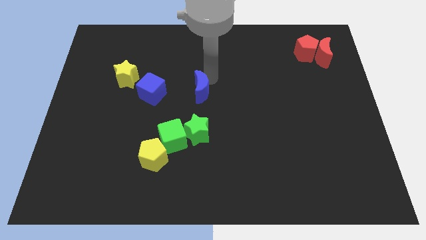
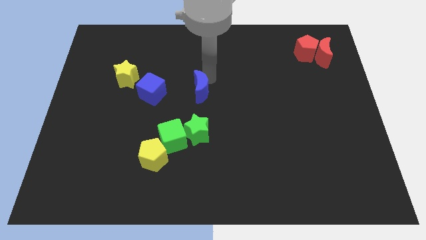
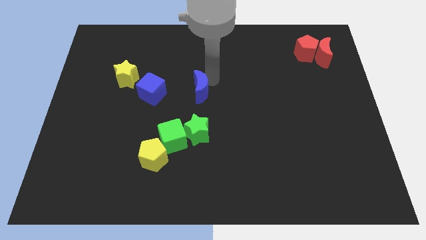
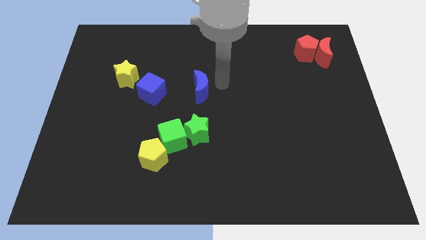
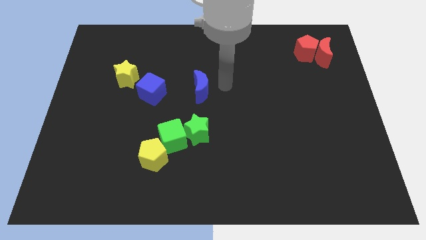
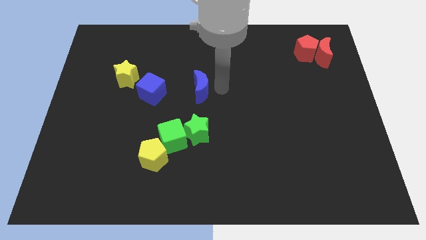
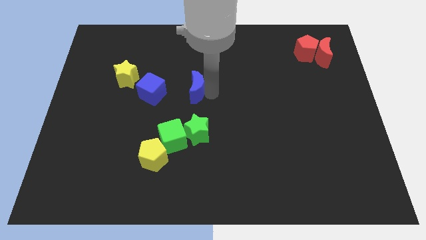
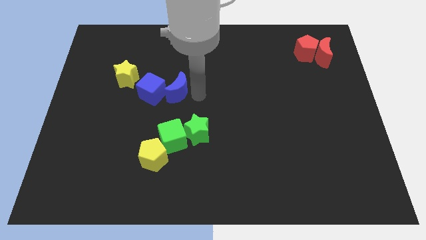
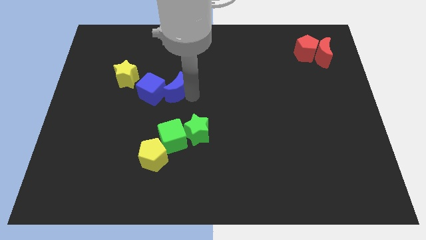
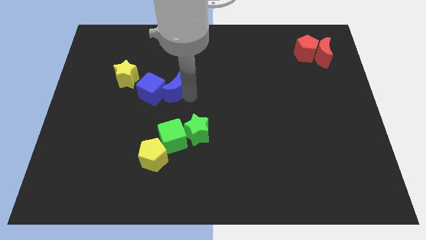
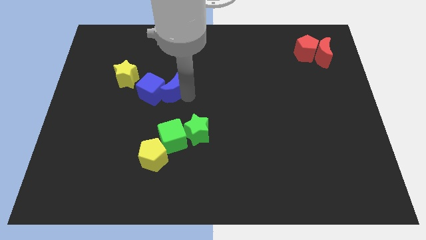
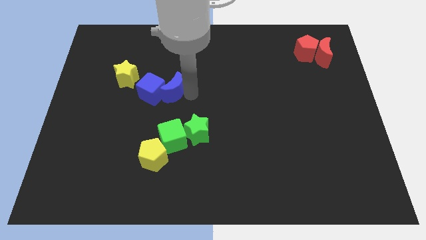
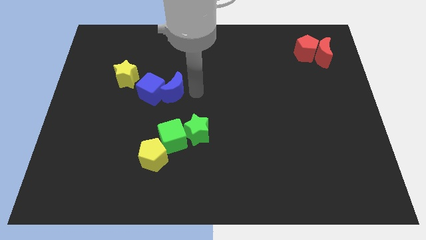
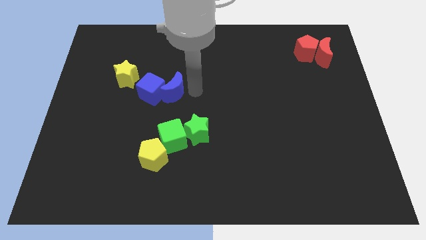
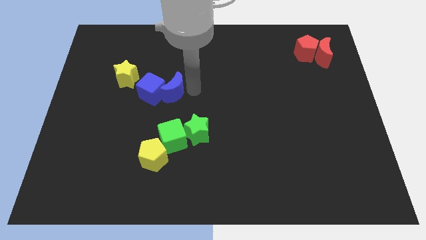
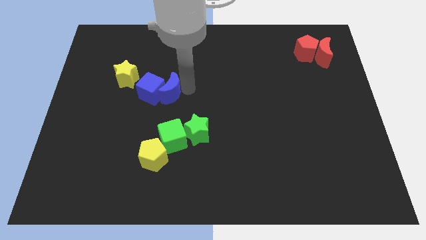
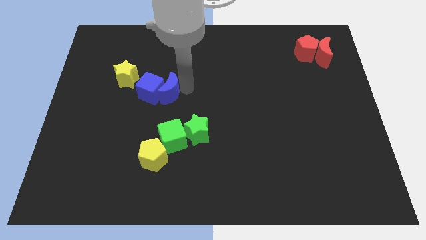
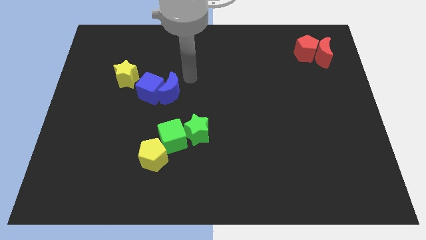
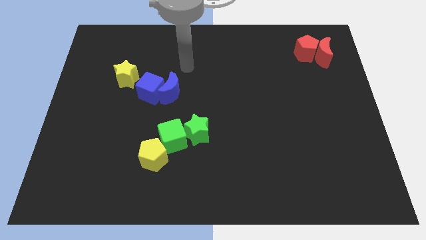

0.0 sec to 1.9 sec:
push the blue moon into blue cube to the right

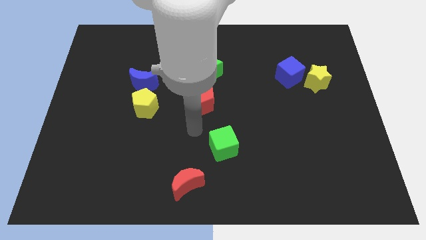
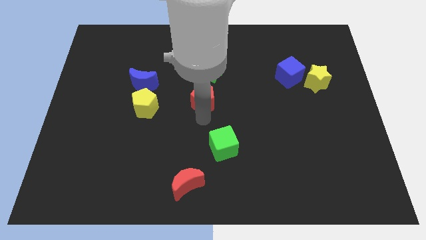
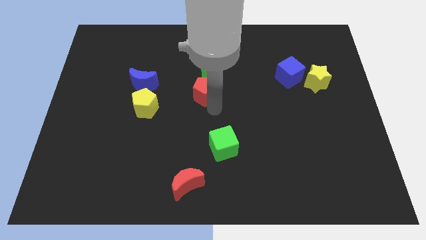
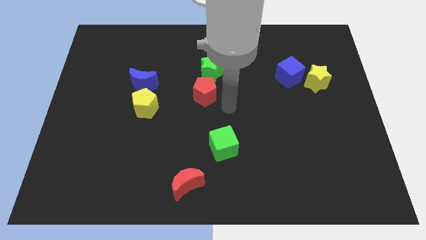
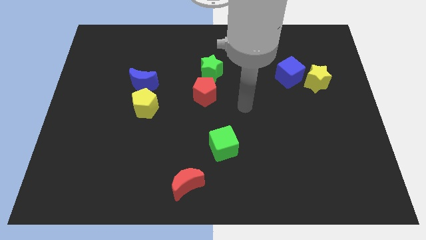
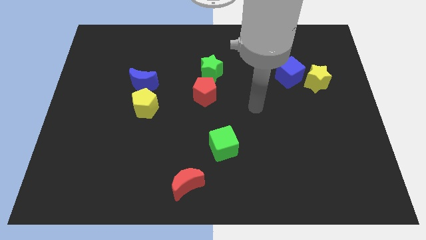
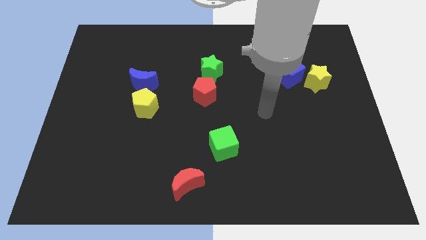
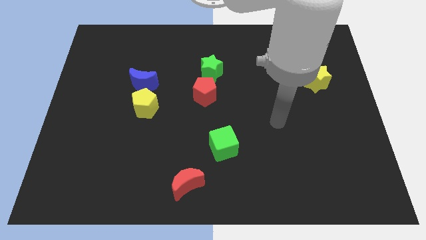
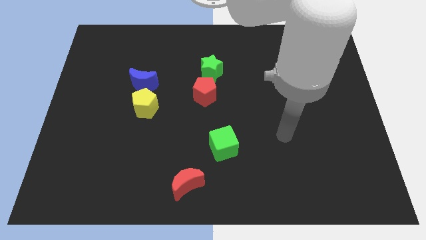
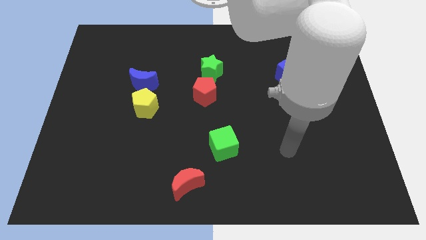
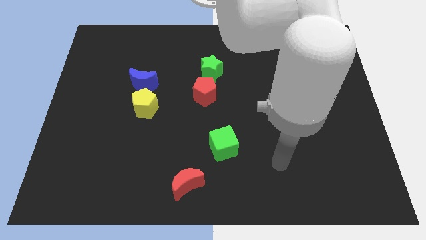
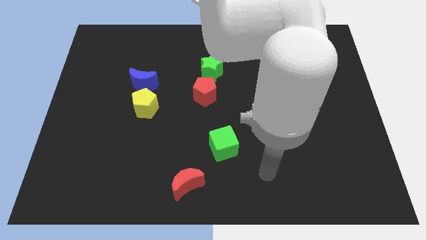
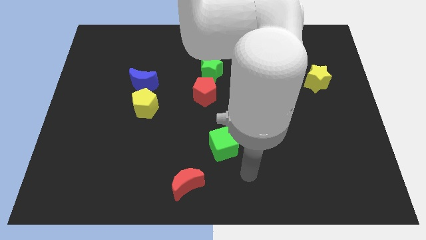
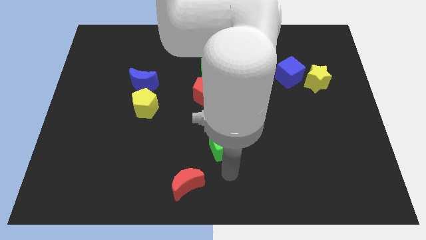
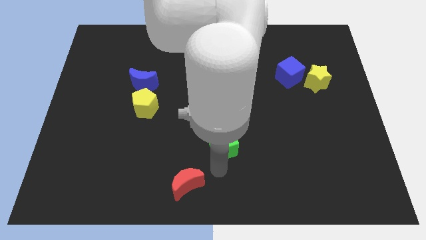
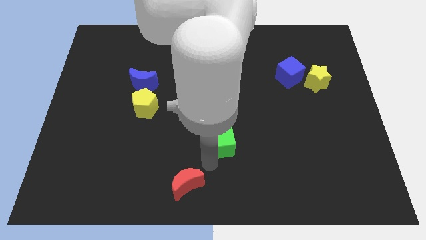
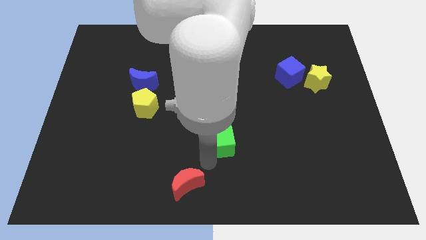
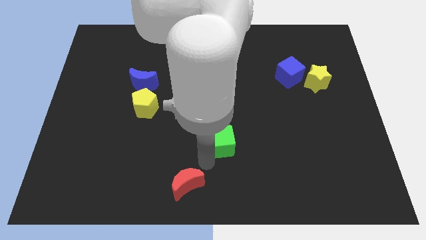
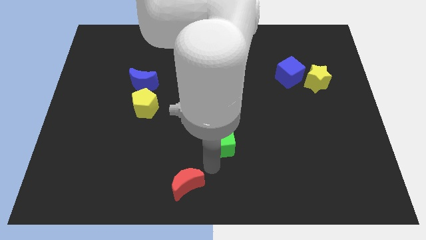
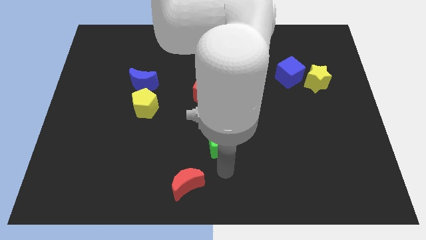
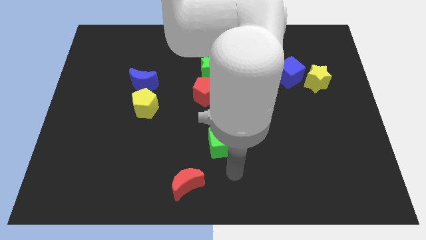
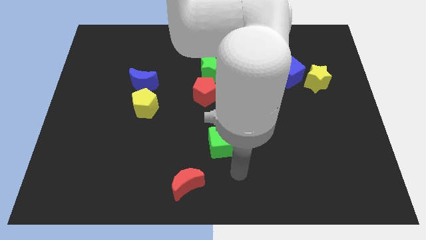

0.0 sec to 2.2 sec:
push green cube towards the red pentagan

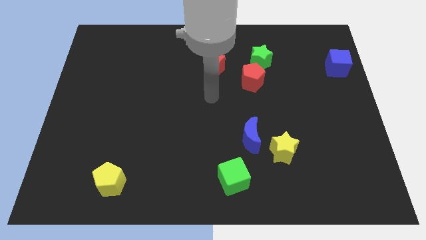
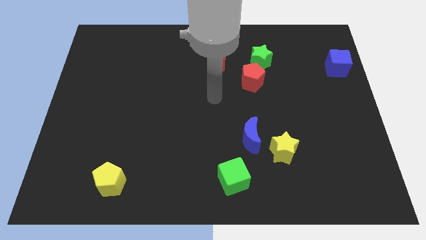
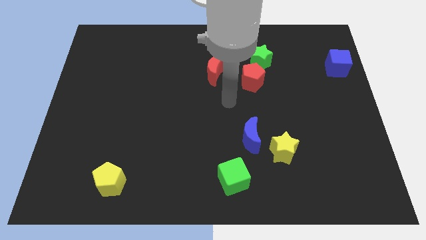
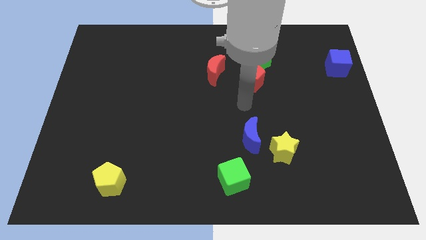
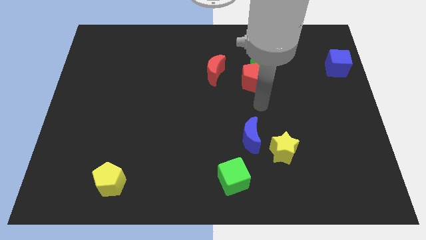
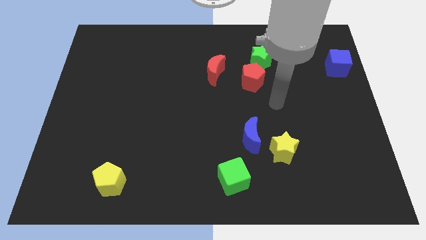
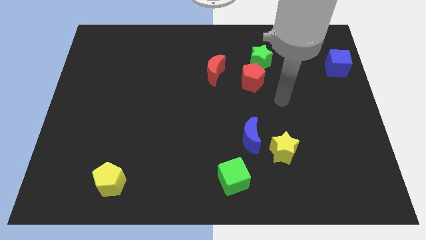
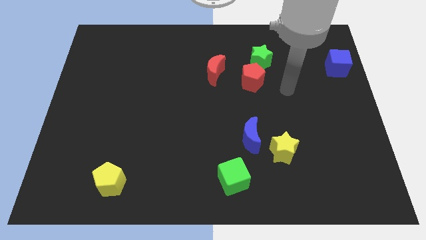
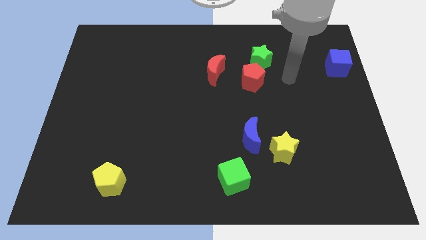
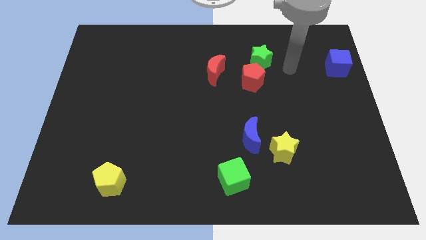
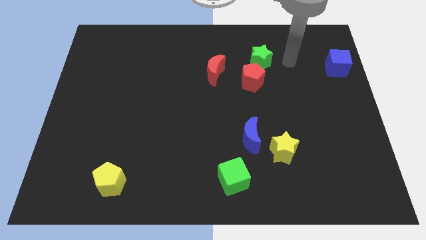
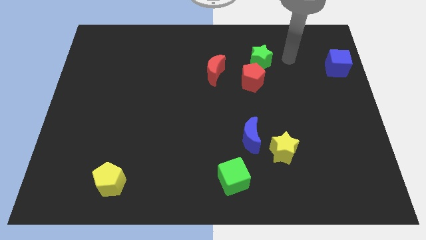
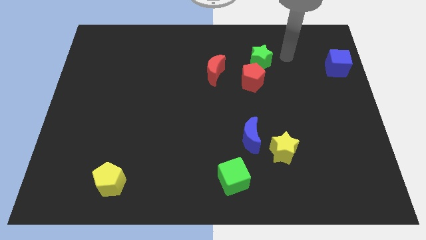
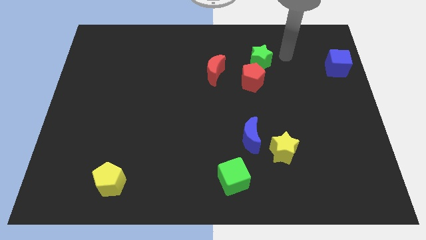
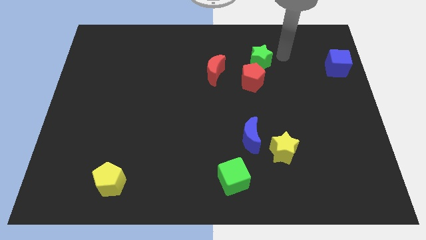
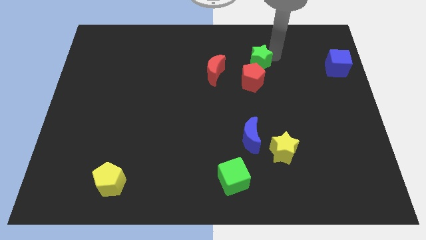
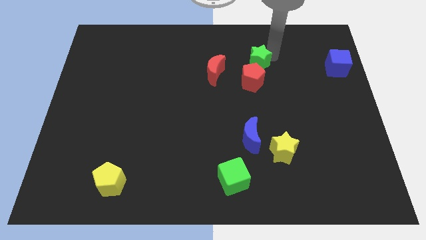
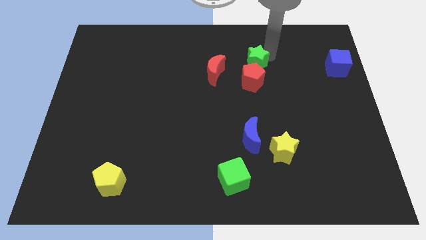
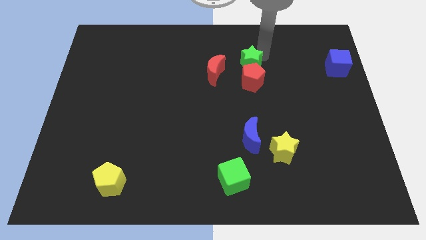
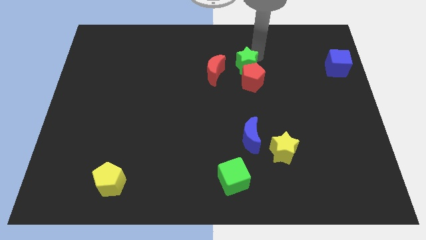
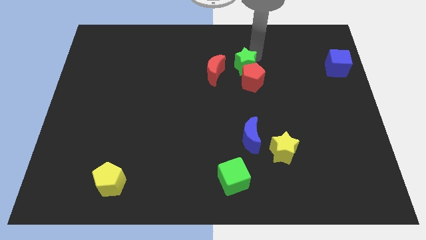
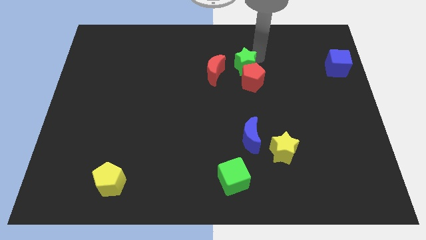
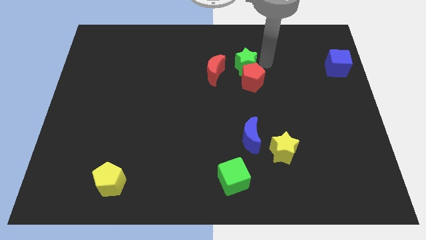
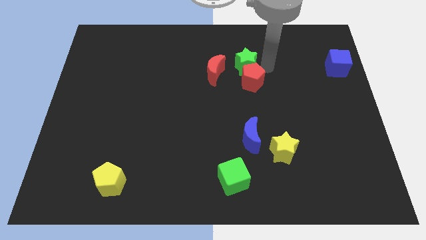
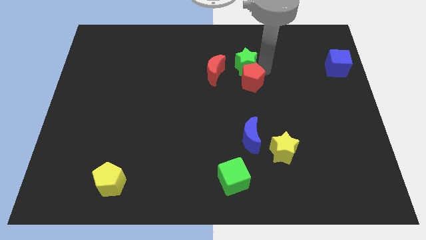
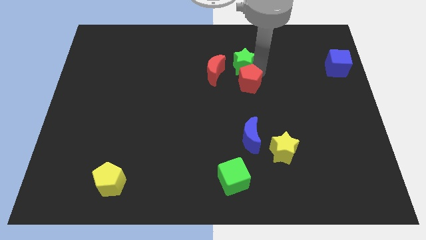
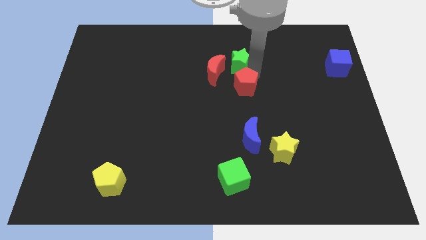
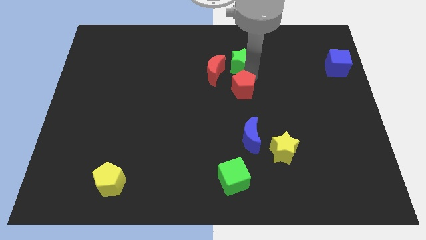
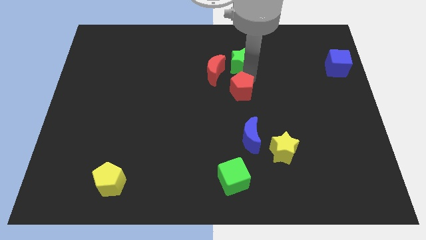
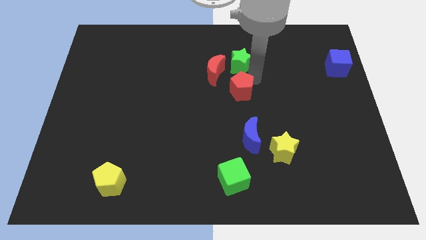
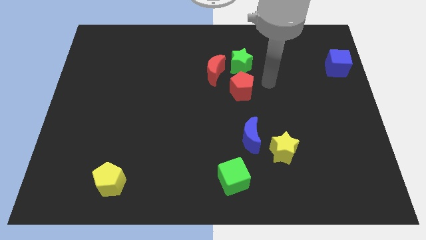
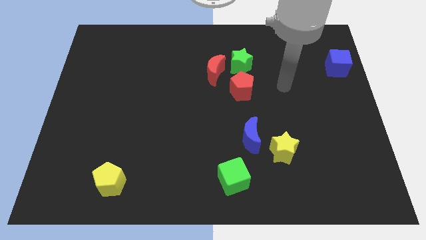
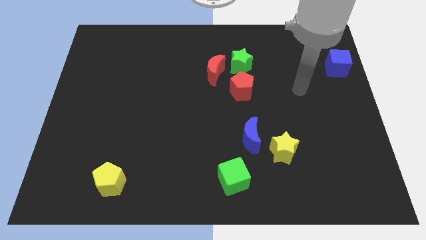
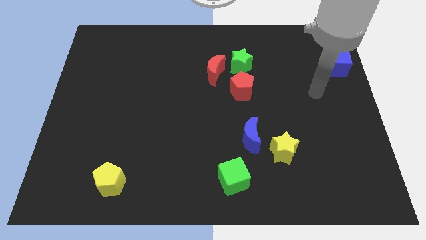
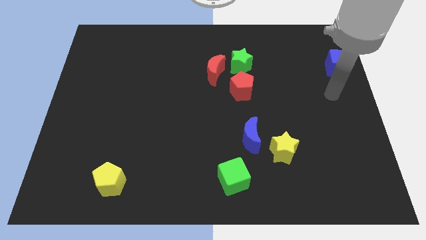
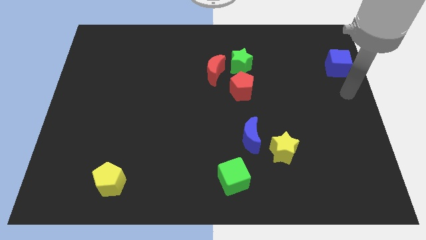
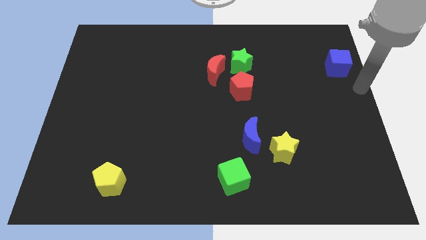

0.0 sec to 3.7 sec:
move the red pentagon and the green star to the right of the red crescent

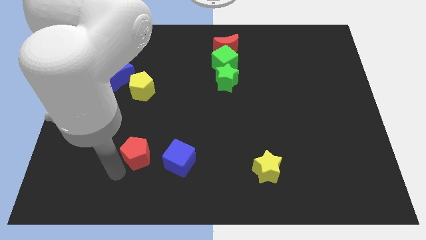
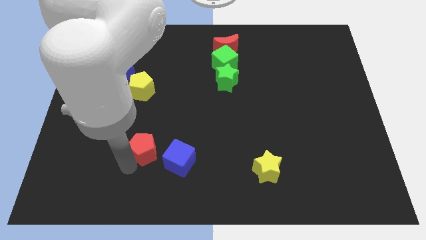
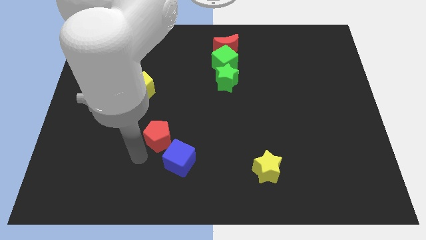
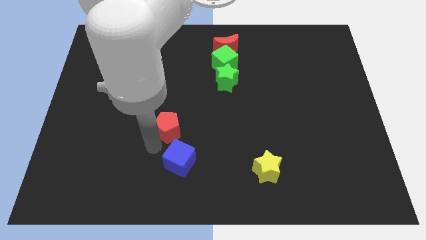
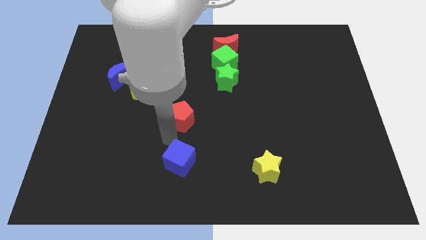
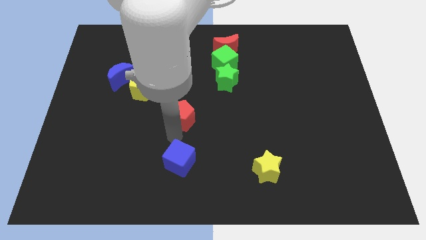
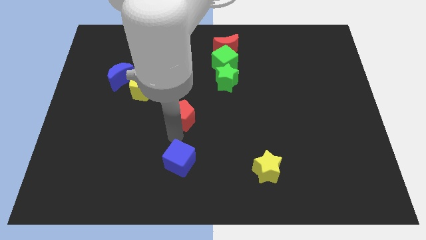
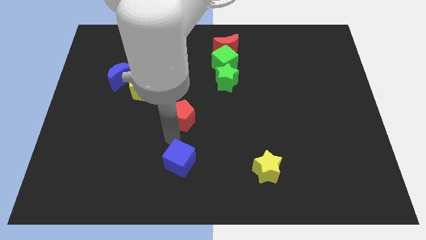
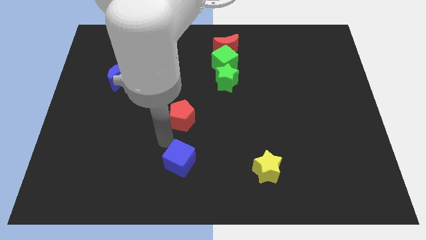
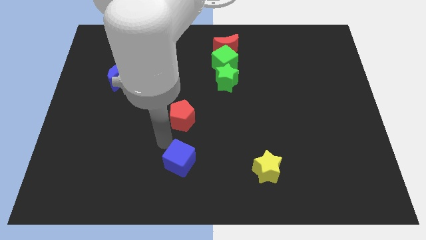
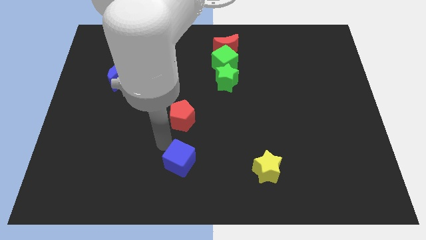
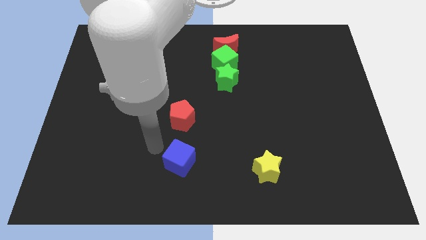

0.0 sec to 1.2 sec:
place the red pentagon to the top of the blue cube

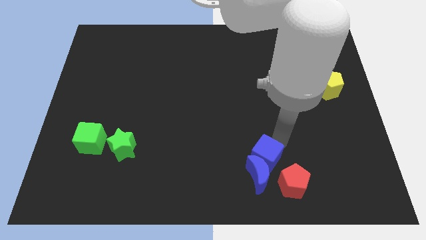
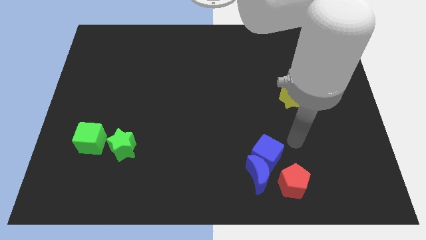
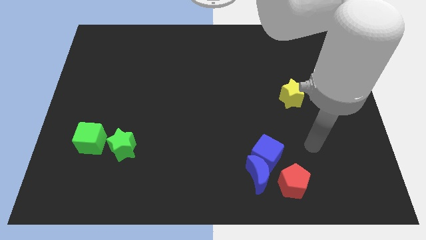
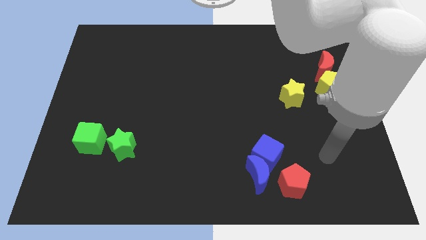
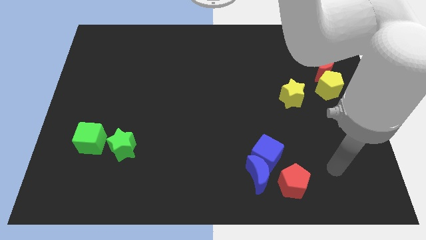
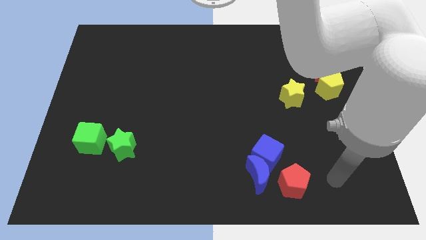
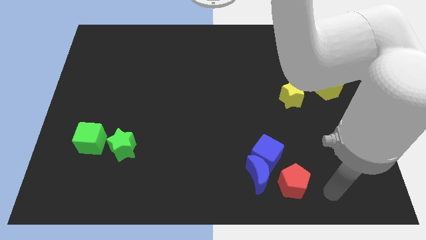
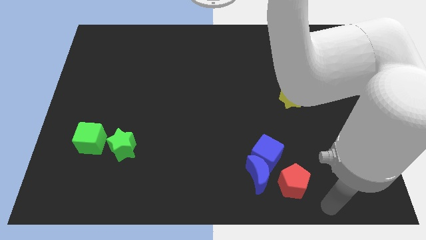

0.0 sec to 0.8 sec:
move the arm away from the blue cube
